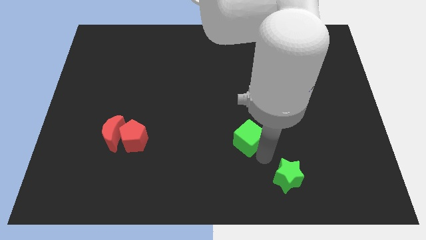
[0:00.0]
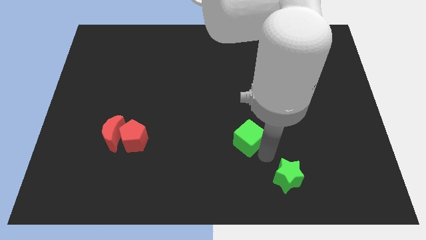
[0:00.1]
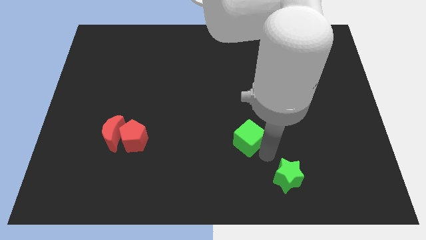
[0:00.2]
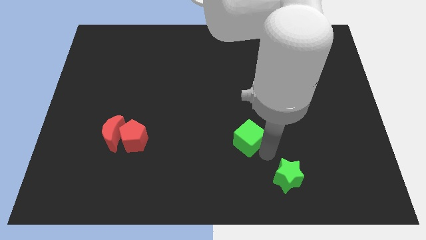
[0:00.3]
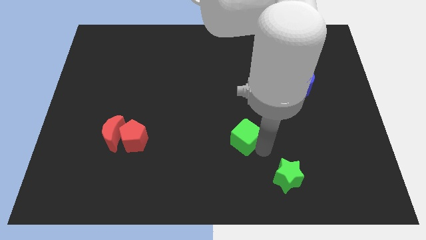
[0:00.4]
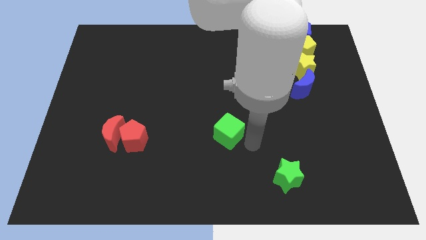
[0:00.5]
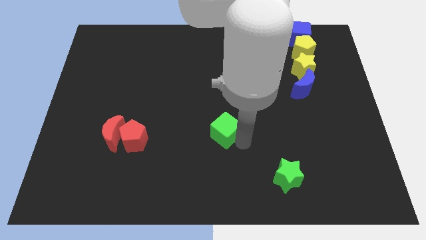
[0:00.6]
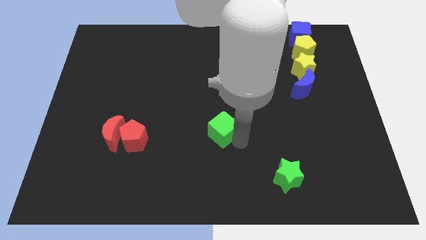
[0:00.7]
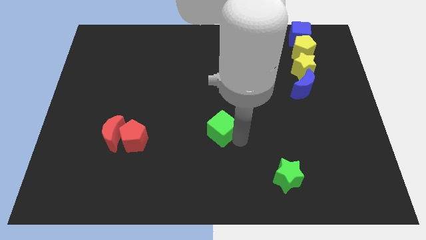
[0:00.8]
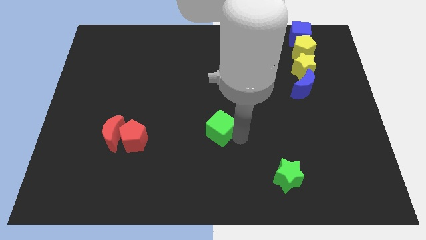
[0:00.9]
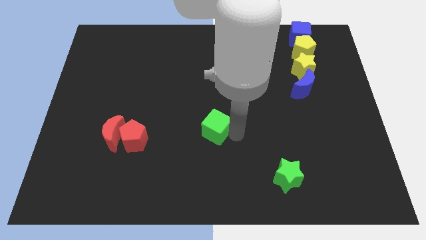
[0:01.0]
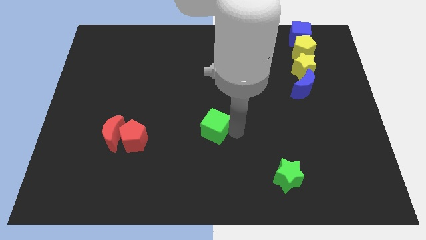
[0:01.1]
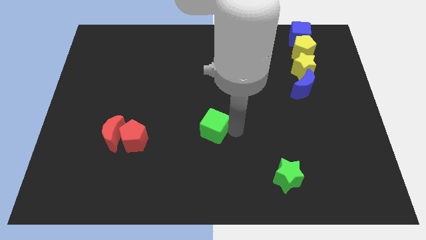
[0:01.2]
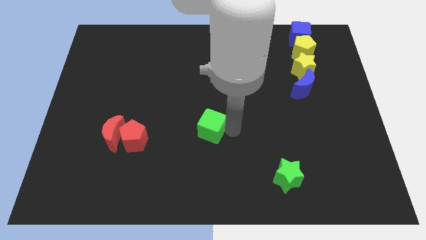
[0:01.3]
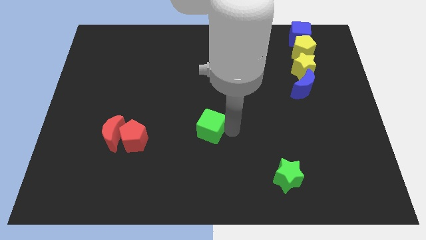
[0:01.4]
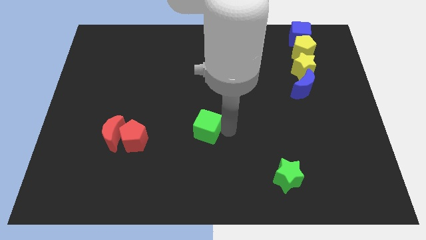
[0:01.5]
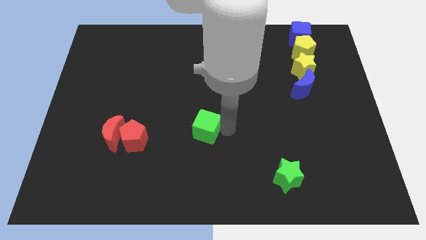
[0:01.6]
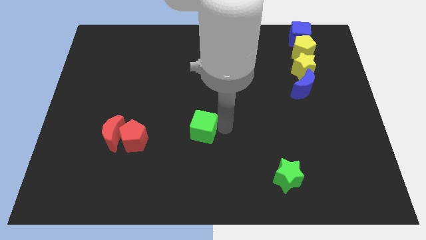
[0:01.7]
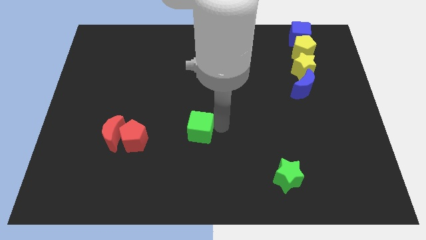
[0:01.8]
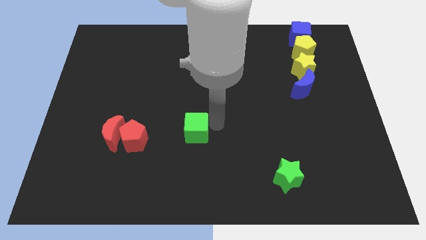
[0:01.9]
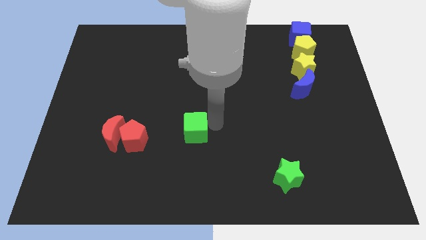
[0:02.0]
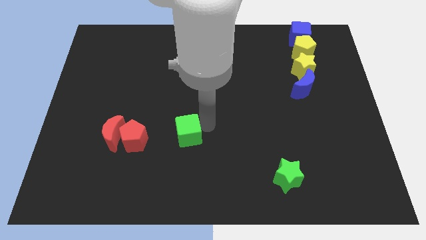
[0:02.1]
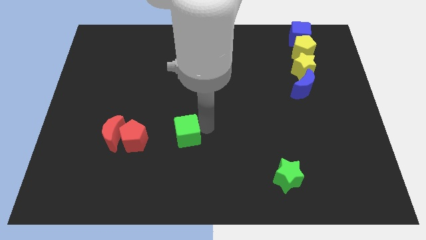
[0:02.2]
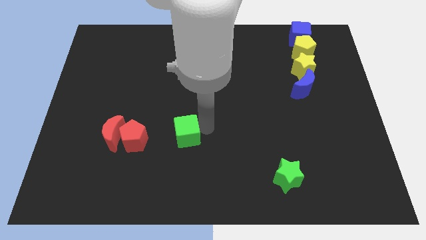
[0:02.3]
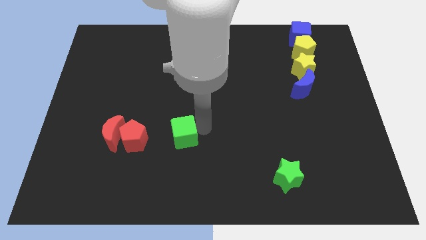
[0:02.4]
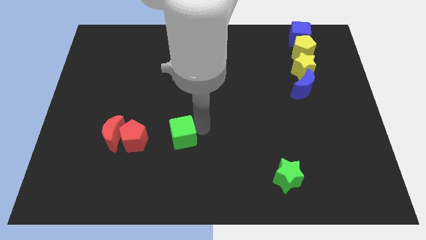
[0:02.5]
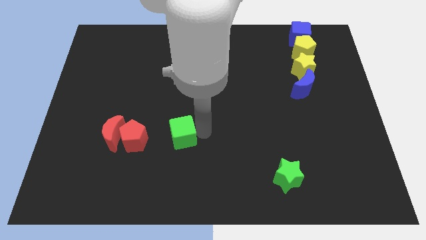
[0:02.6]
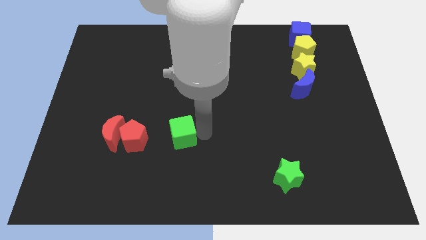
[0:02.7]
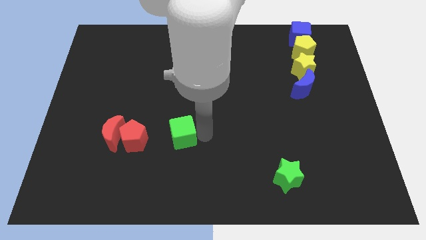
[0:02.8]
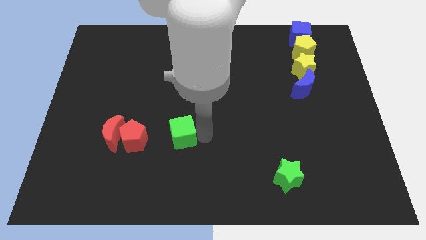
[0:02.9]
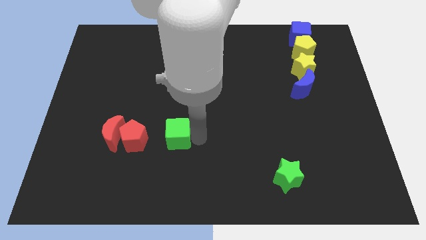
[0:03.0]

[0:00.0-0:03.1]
put the green cube to the right of the group of red blocks

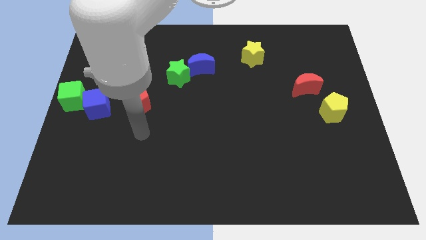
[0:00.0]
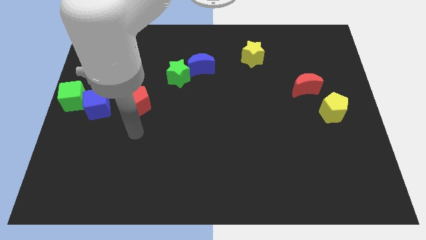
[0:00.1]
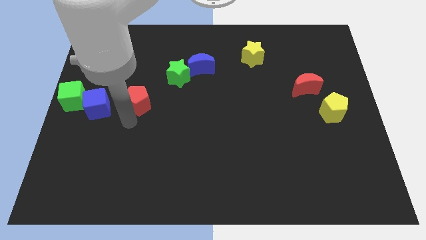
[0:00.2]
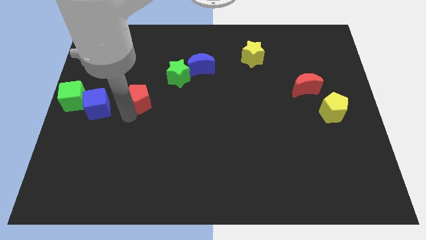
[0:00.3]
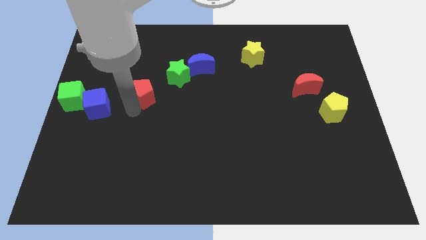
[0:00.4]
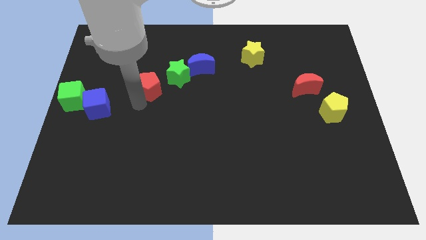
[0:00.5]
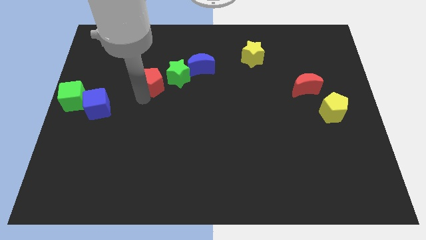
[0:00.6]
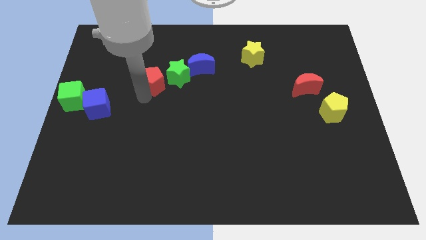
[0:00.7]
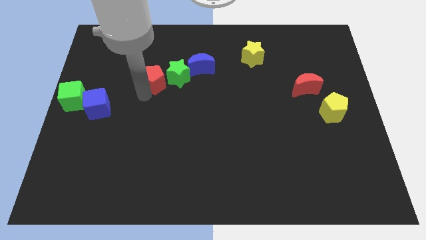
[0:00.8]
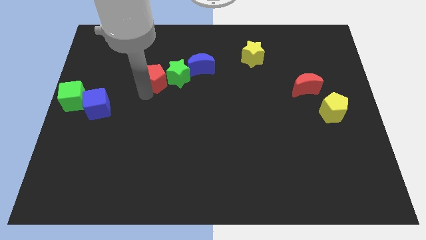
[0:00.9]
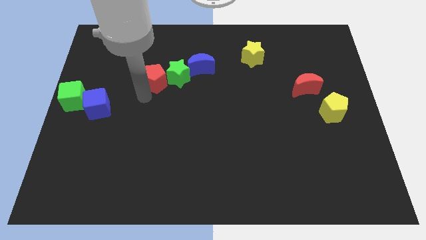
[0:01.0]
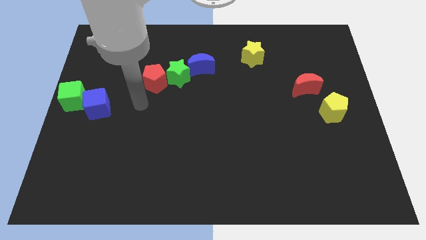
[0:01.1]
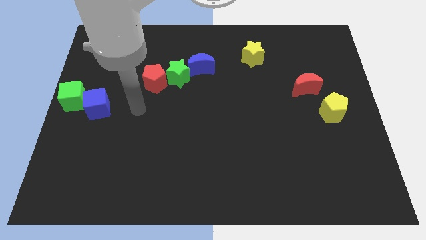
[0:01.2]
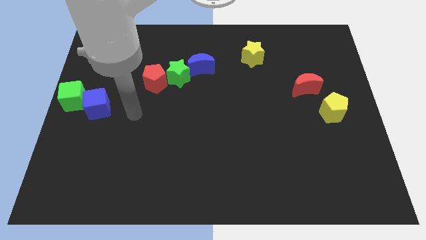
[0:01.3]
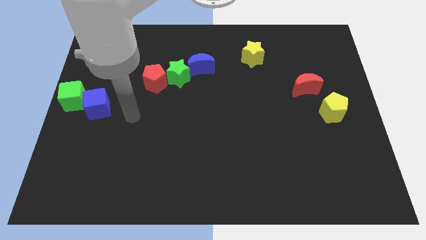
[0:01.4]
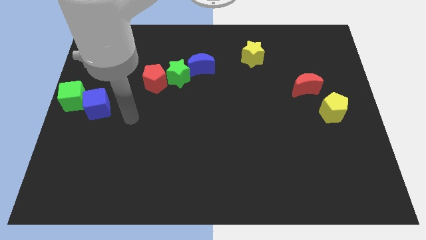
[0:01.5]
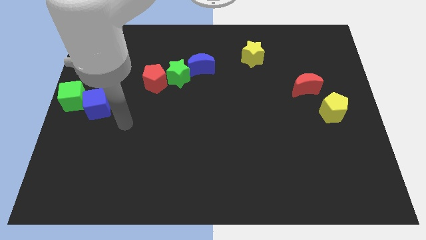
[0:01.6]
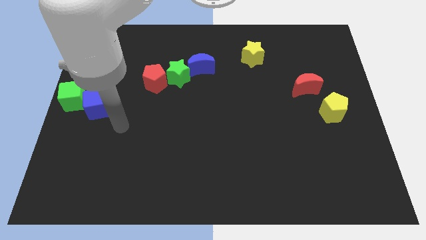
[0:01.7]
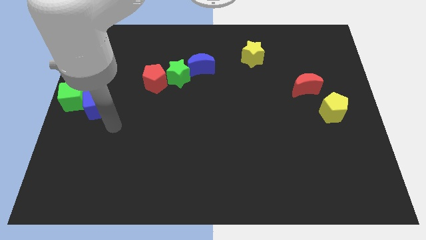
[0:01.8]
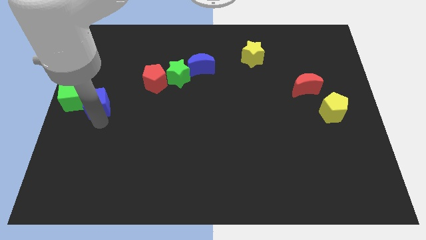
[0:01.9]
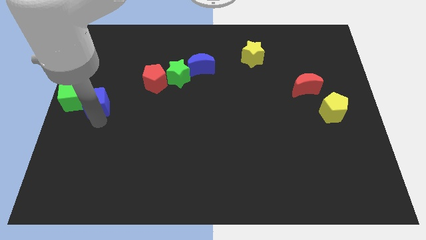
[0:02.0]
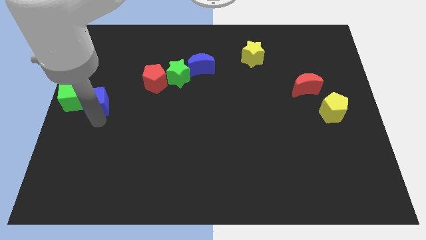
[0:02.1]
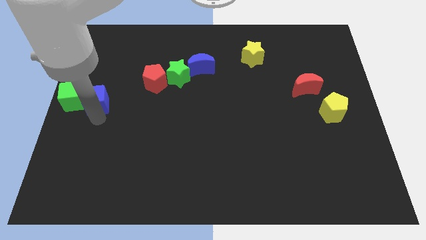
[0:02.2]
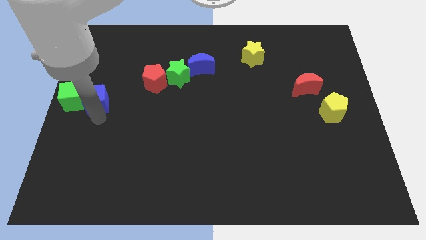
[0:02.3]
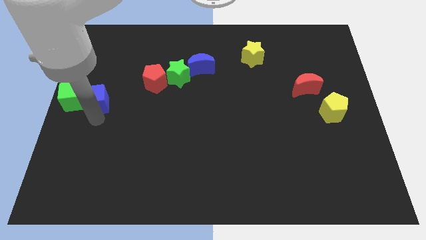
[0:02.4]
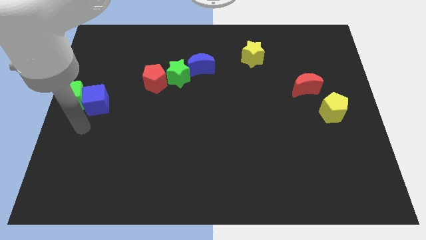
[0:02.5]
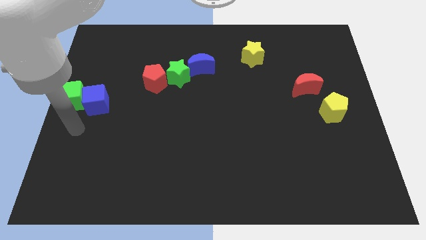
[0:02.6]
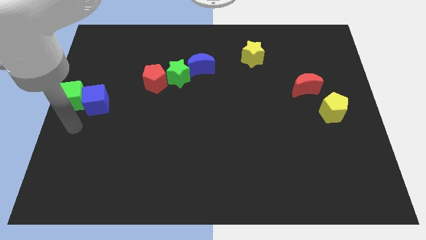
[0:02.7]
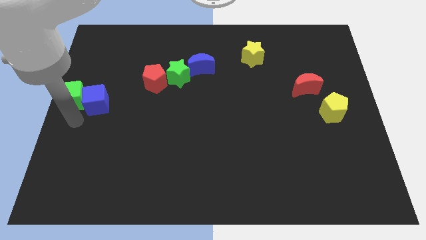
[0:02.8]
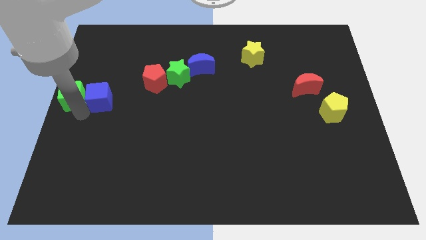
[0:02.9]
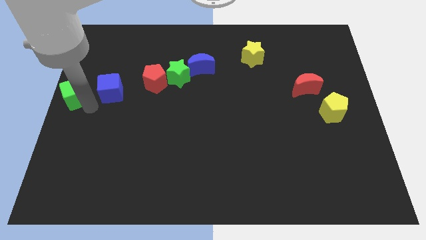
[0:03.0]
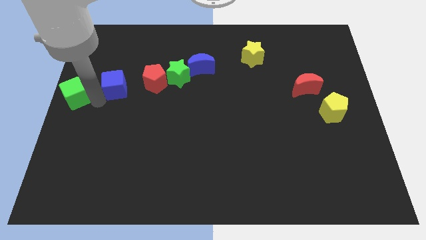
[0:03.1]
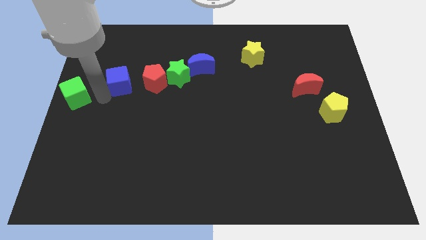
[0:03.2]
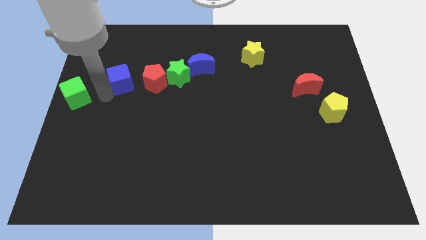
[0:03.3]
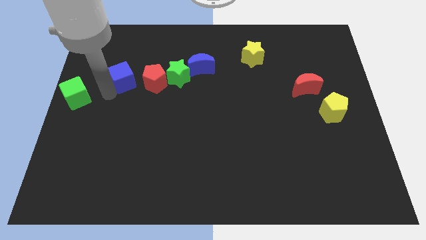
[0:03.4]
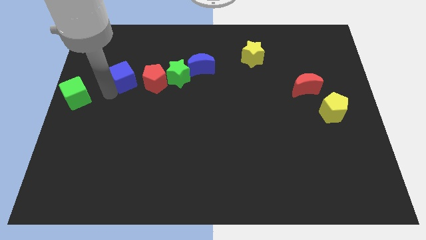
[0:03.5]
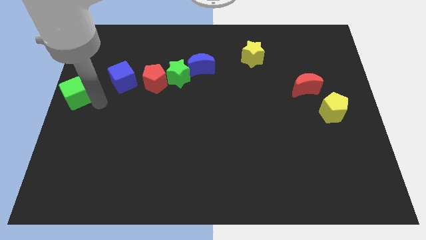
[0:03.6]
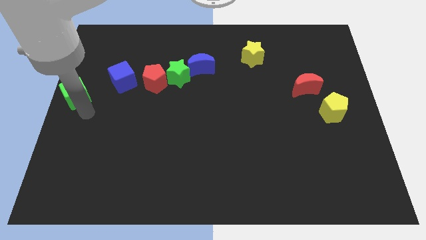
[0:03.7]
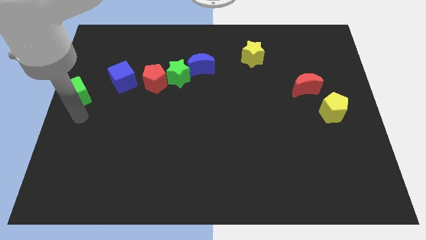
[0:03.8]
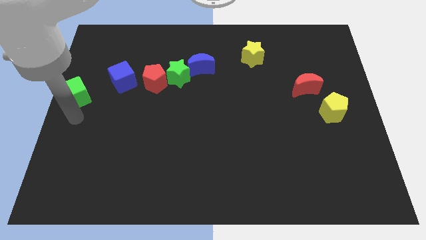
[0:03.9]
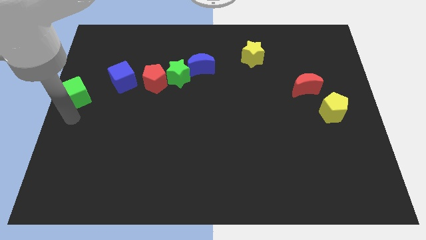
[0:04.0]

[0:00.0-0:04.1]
push the blue cube to the left side of the red pentagon

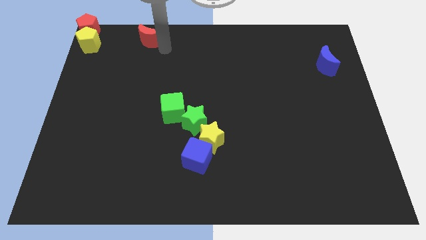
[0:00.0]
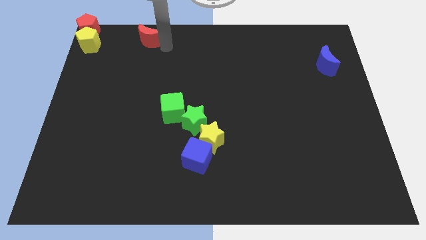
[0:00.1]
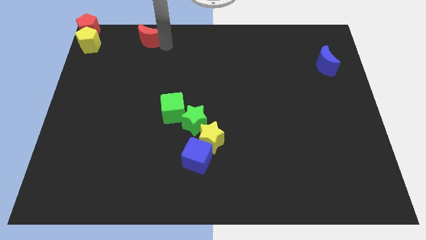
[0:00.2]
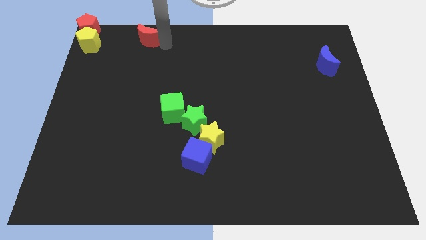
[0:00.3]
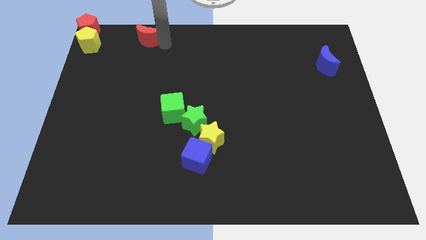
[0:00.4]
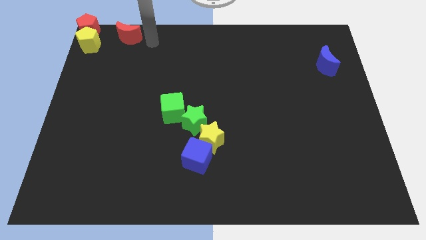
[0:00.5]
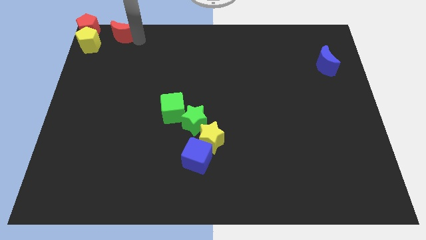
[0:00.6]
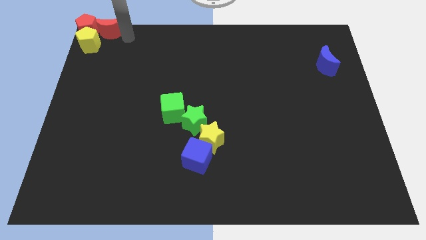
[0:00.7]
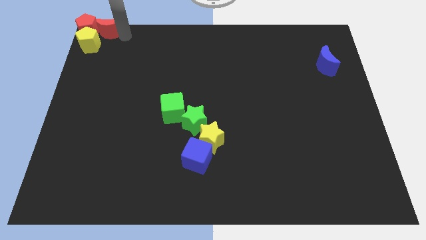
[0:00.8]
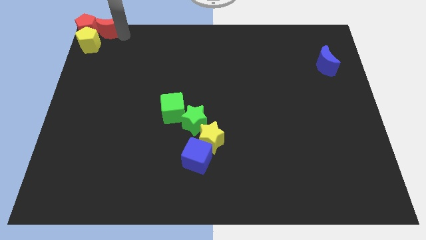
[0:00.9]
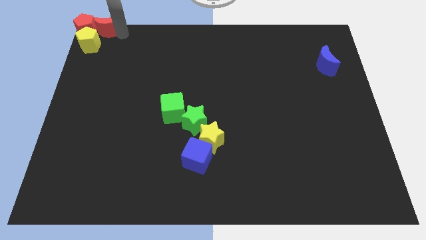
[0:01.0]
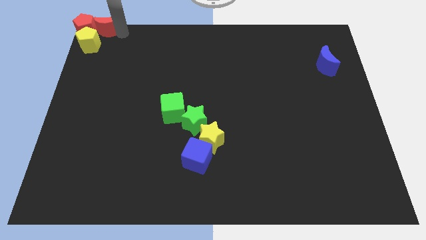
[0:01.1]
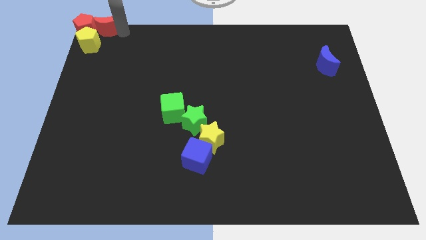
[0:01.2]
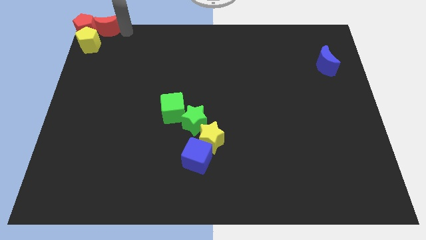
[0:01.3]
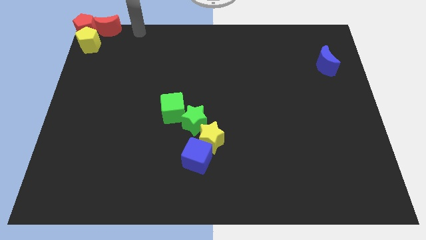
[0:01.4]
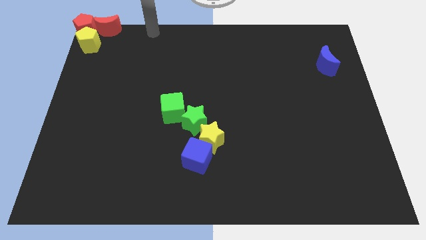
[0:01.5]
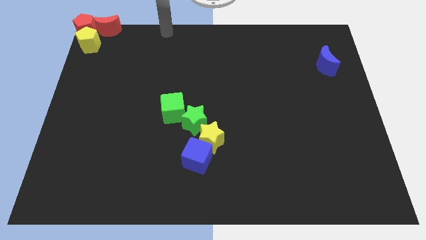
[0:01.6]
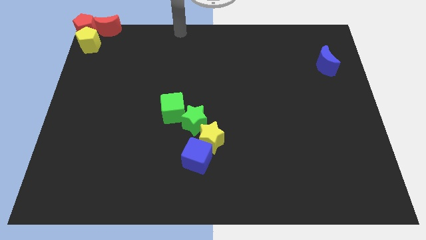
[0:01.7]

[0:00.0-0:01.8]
push the red moon into the red pentagon
